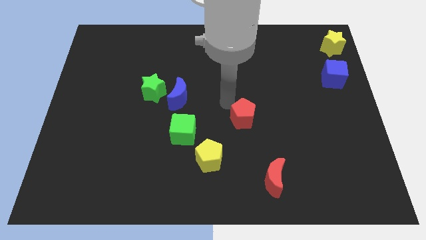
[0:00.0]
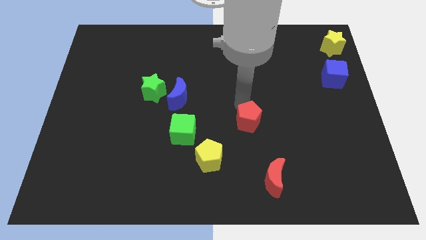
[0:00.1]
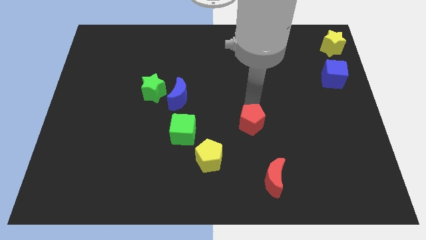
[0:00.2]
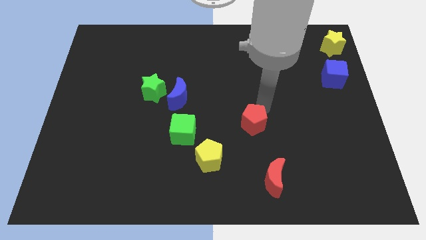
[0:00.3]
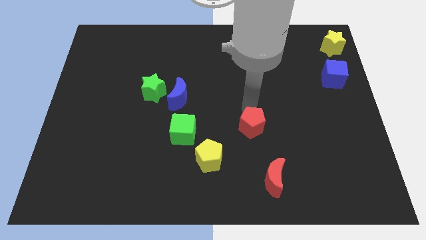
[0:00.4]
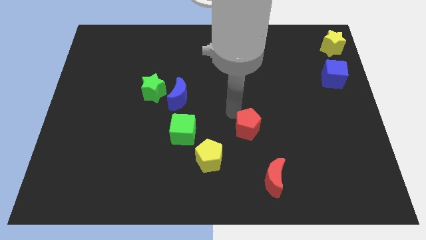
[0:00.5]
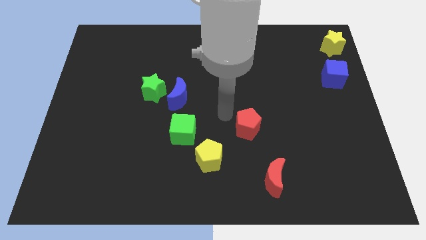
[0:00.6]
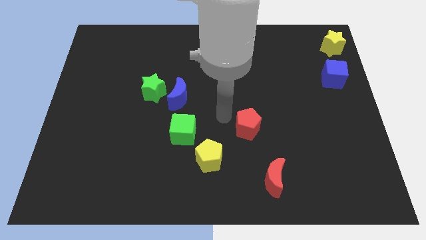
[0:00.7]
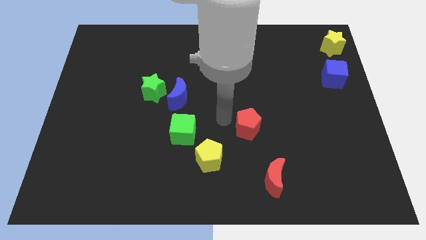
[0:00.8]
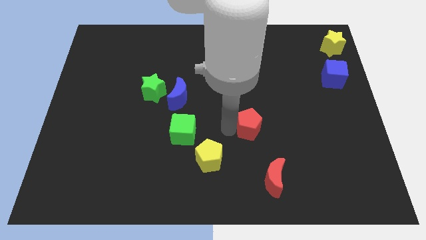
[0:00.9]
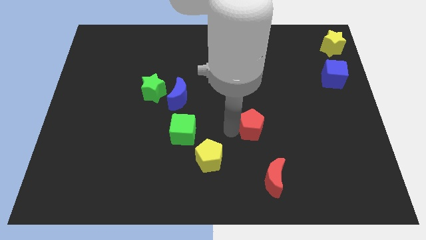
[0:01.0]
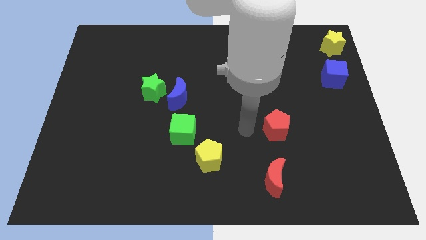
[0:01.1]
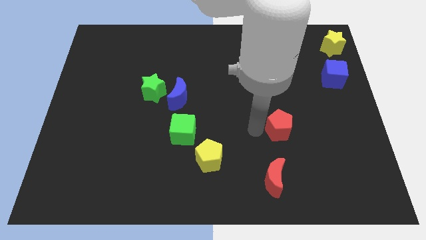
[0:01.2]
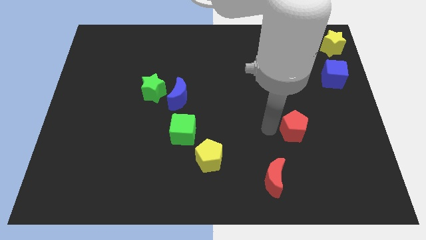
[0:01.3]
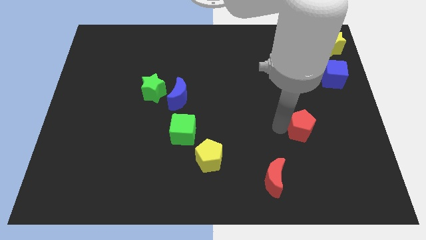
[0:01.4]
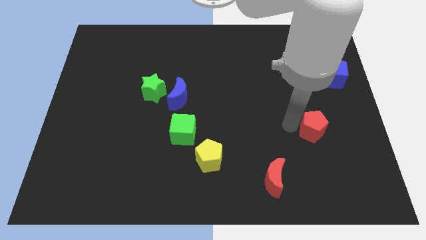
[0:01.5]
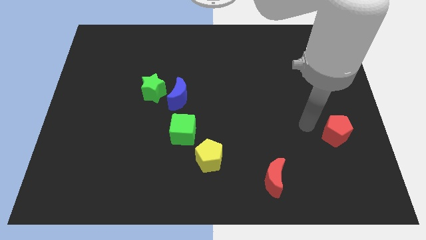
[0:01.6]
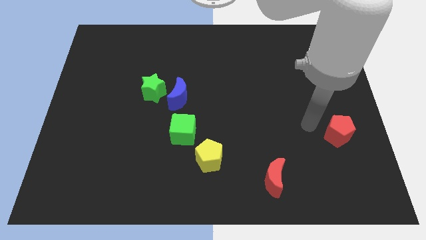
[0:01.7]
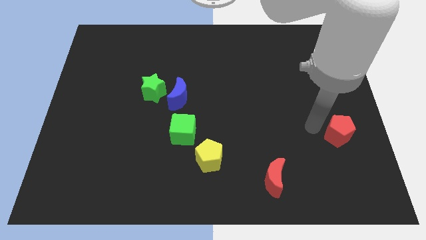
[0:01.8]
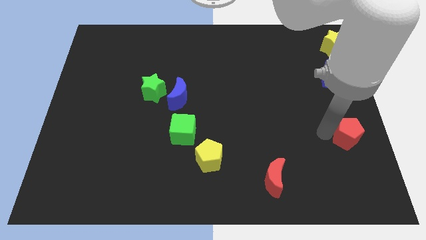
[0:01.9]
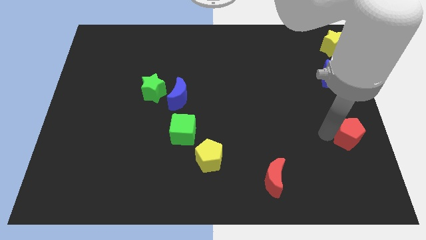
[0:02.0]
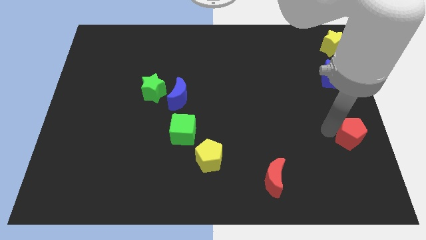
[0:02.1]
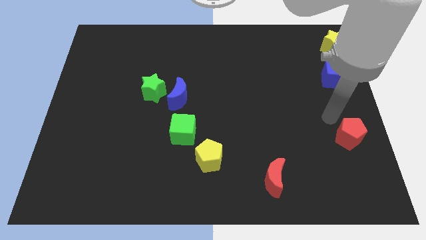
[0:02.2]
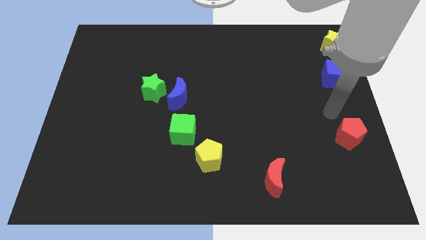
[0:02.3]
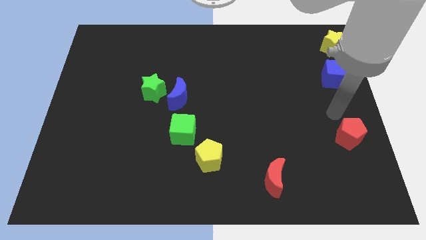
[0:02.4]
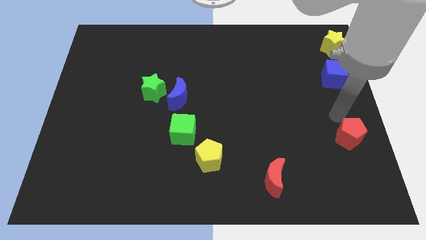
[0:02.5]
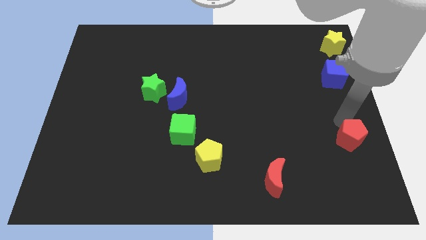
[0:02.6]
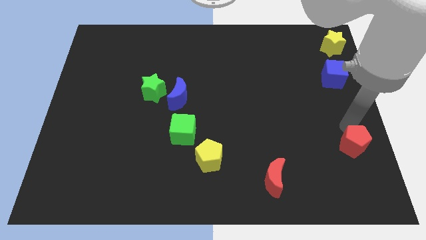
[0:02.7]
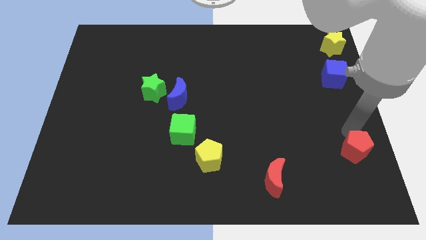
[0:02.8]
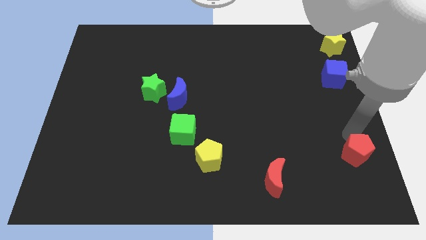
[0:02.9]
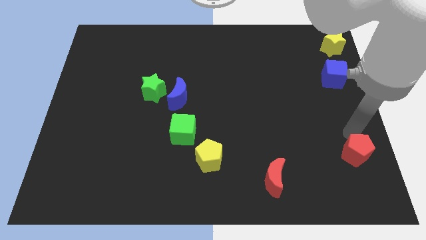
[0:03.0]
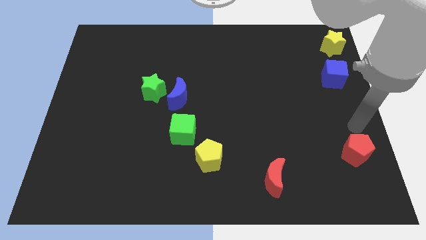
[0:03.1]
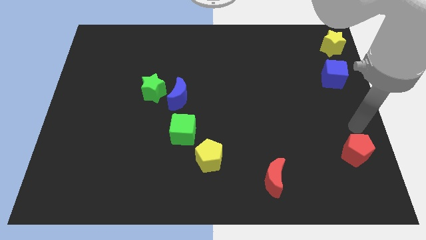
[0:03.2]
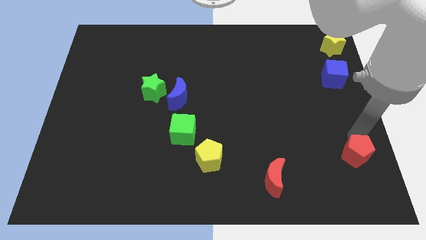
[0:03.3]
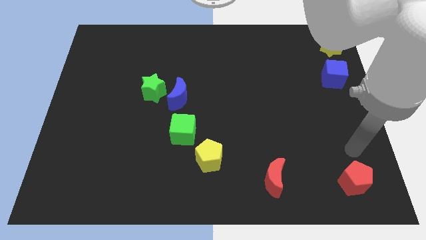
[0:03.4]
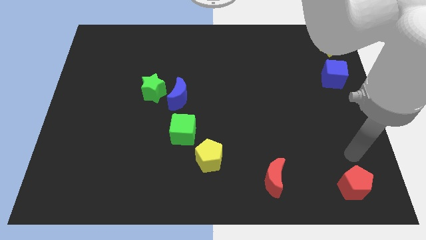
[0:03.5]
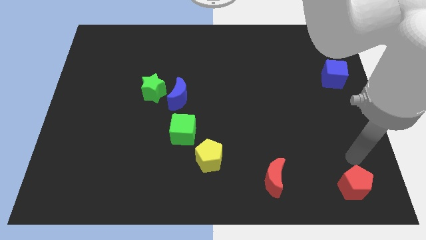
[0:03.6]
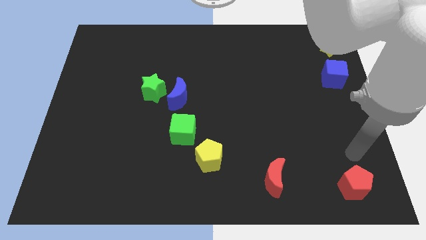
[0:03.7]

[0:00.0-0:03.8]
place red pentagon to the right of red moon

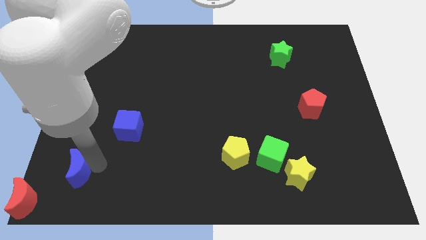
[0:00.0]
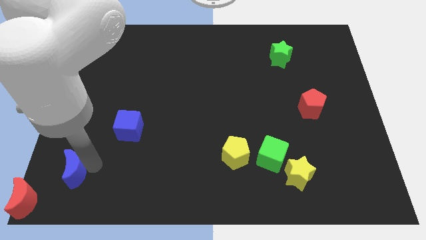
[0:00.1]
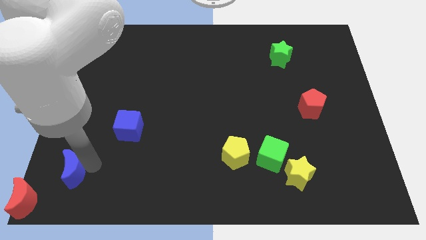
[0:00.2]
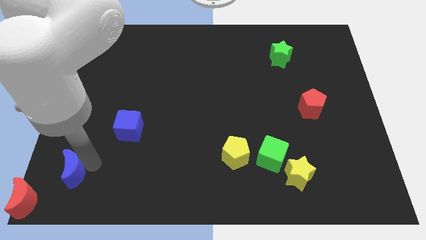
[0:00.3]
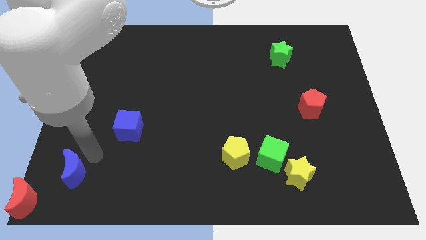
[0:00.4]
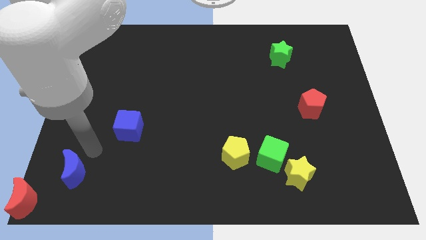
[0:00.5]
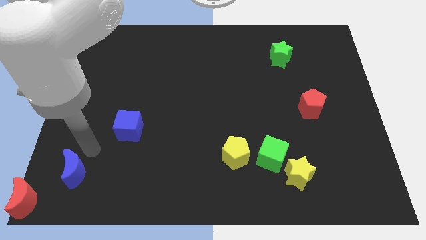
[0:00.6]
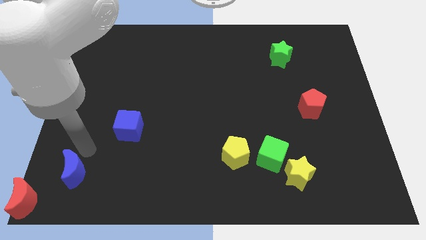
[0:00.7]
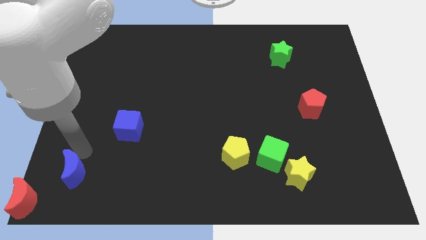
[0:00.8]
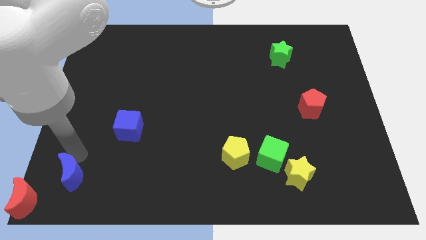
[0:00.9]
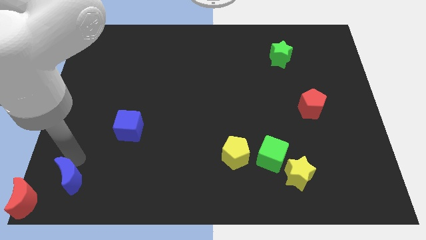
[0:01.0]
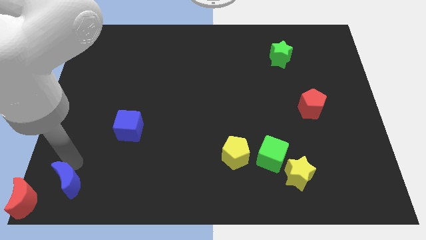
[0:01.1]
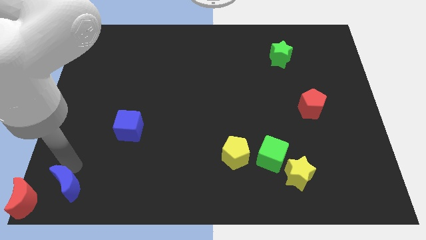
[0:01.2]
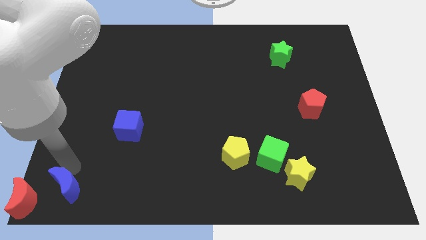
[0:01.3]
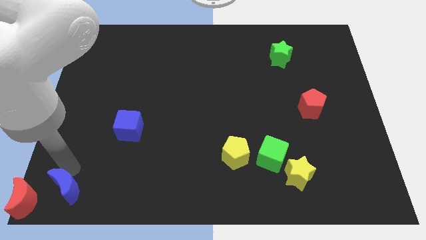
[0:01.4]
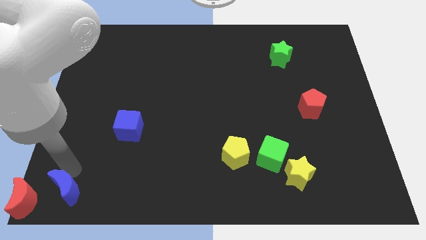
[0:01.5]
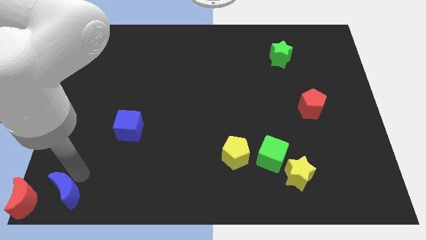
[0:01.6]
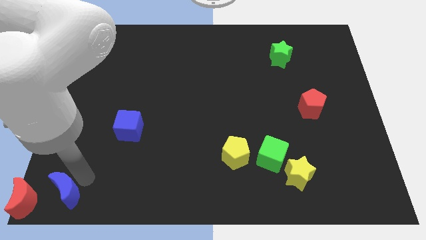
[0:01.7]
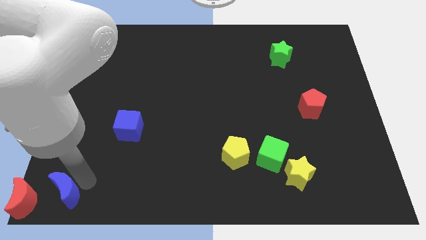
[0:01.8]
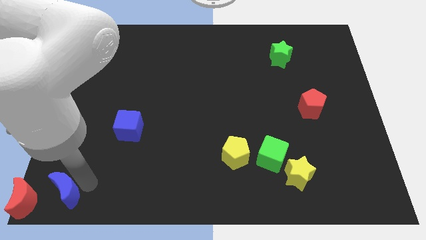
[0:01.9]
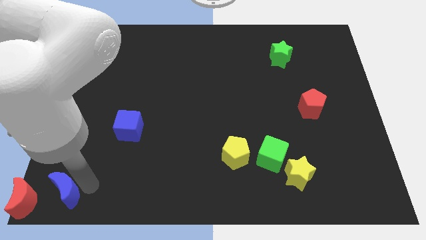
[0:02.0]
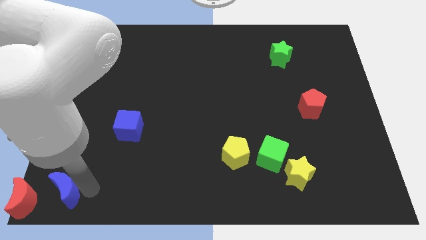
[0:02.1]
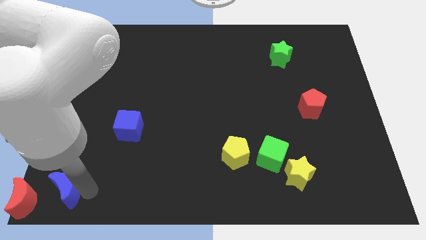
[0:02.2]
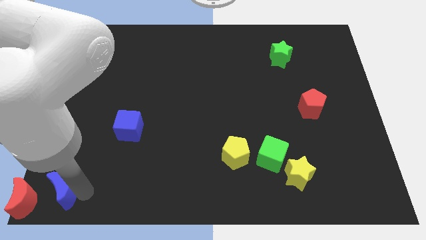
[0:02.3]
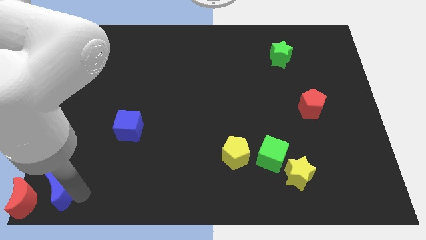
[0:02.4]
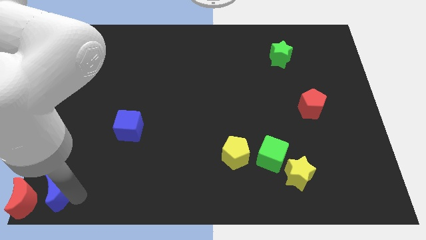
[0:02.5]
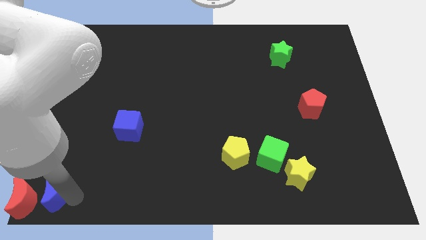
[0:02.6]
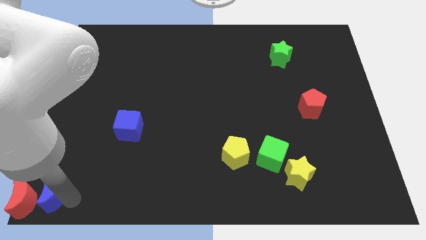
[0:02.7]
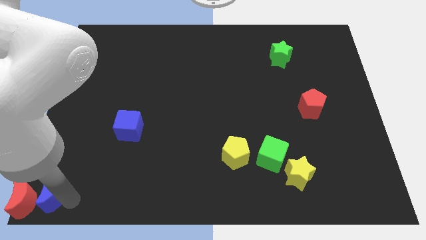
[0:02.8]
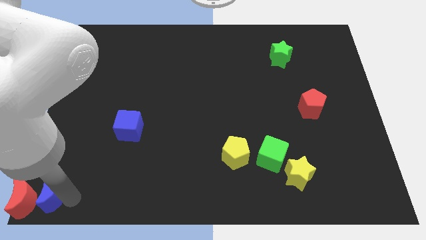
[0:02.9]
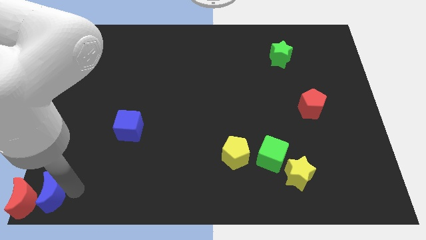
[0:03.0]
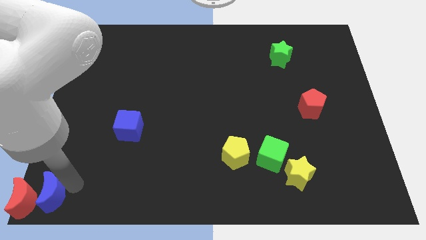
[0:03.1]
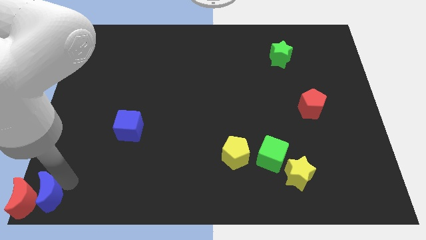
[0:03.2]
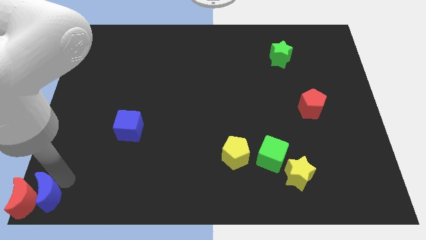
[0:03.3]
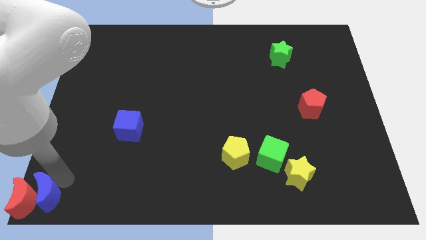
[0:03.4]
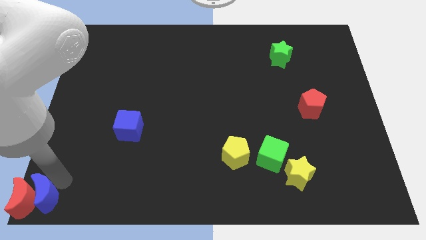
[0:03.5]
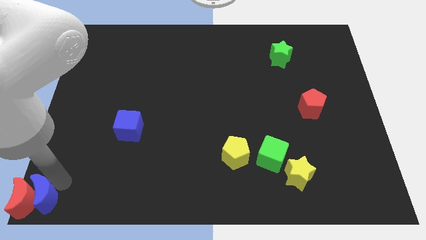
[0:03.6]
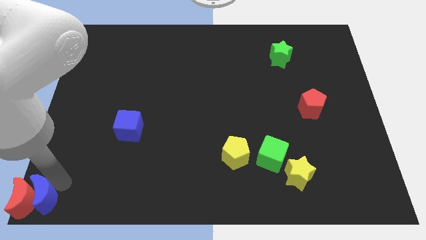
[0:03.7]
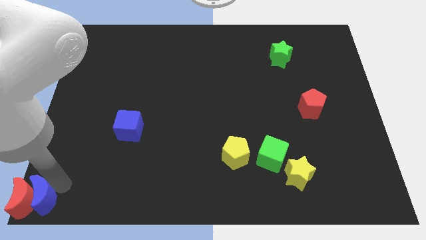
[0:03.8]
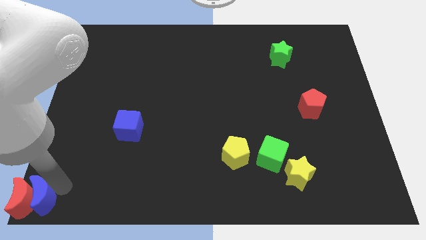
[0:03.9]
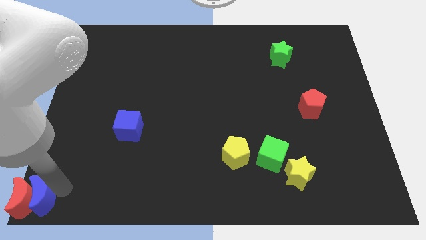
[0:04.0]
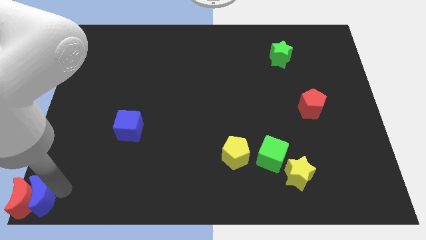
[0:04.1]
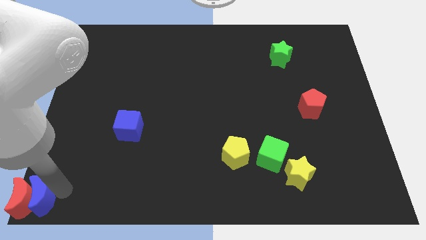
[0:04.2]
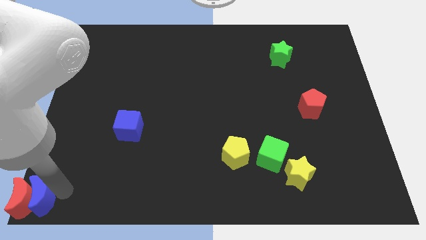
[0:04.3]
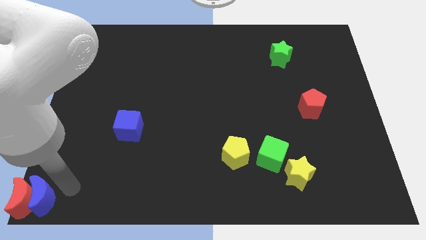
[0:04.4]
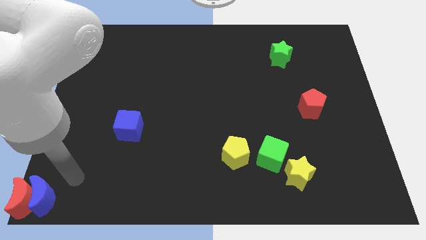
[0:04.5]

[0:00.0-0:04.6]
push the blue moon into the red crescent

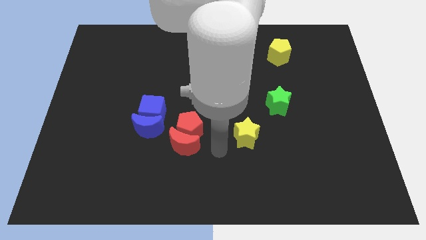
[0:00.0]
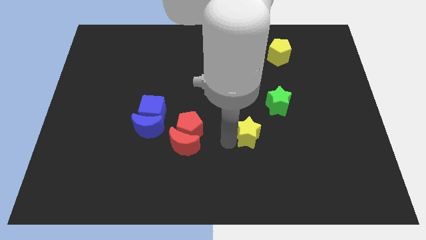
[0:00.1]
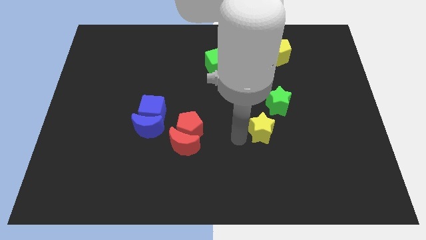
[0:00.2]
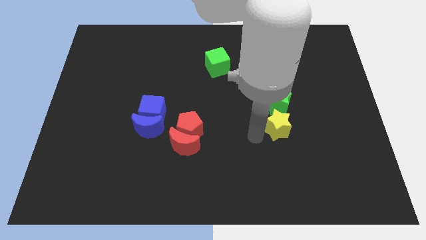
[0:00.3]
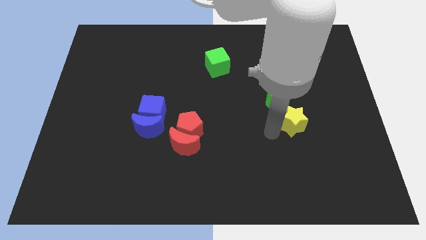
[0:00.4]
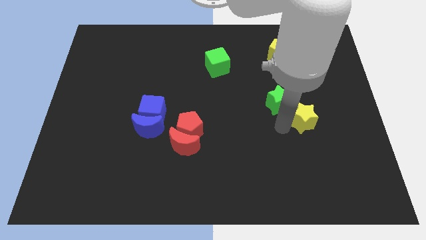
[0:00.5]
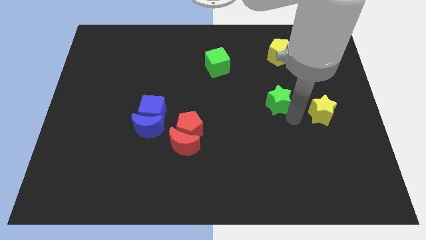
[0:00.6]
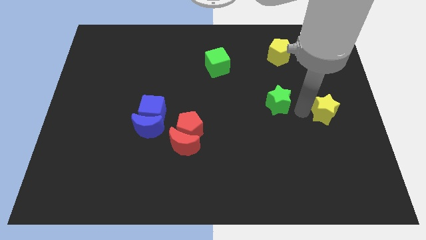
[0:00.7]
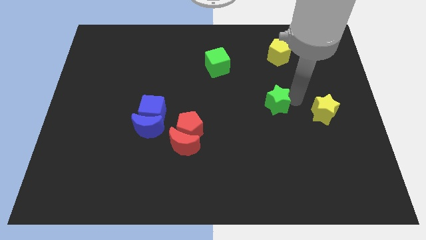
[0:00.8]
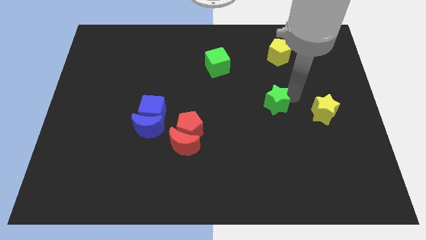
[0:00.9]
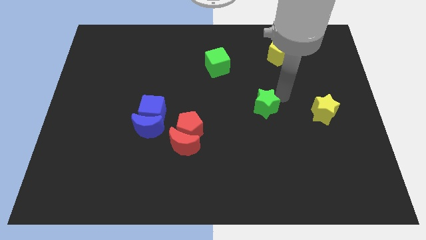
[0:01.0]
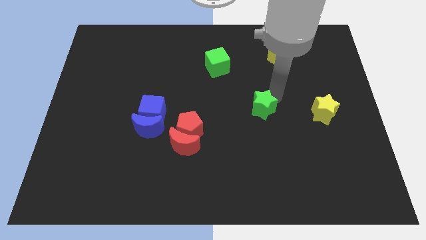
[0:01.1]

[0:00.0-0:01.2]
push yellow star towards center right
